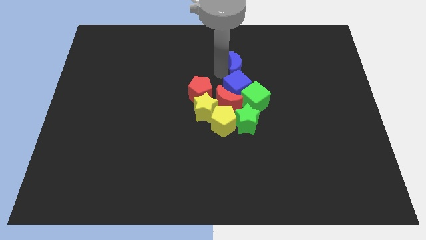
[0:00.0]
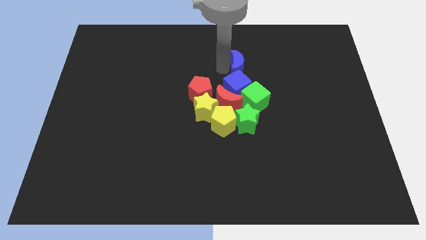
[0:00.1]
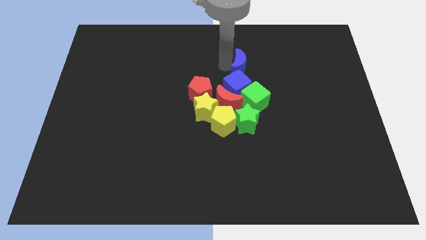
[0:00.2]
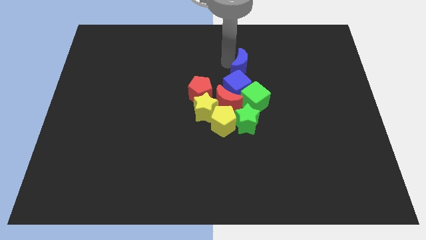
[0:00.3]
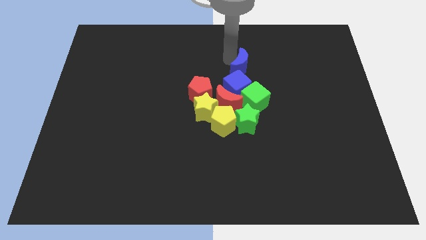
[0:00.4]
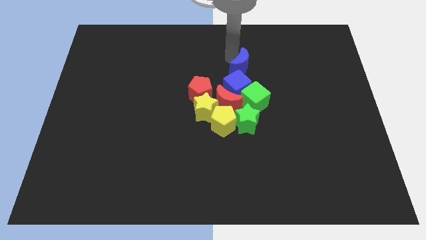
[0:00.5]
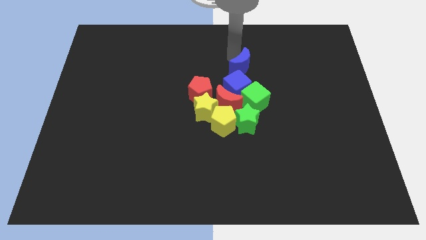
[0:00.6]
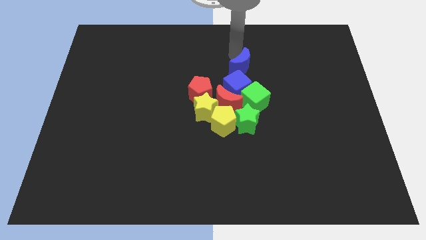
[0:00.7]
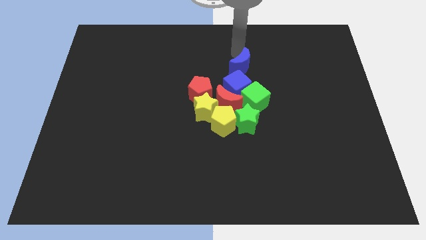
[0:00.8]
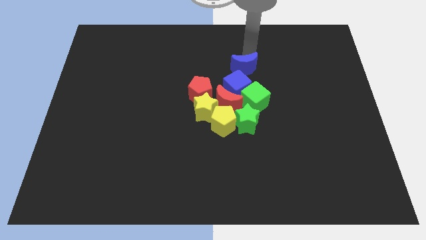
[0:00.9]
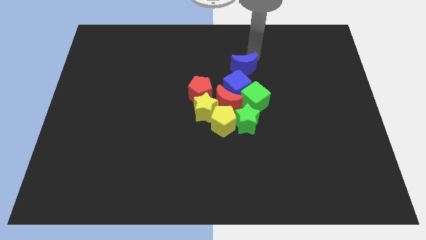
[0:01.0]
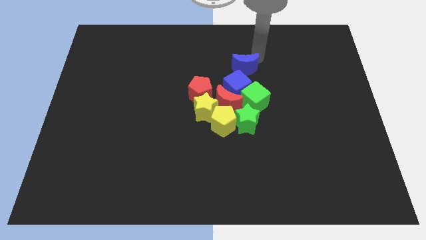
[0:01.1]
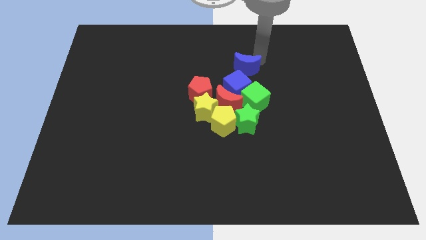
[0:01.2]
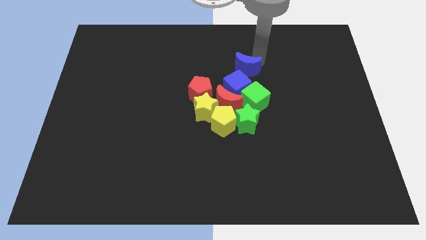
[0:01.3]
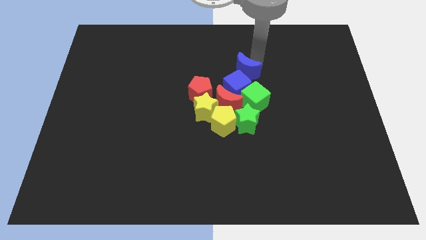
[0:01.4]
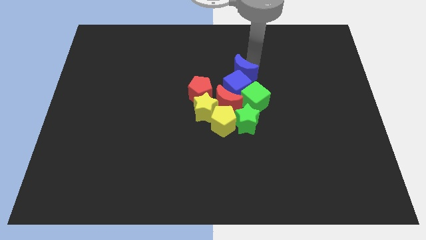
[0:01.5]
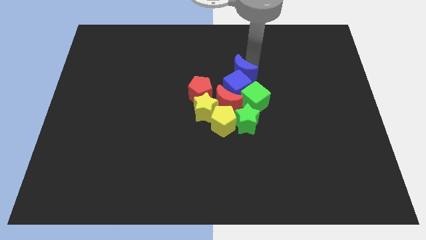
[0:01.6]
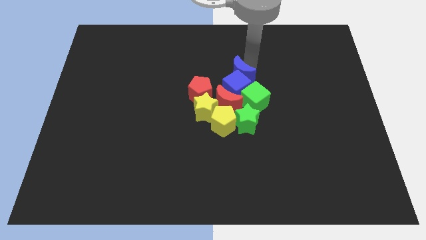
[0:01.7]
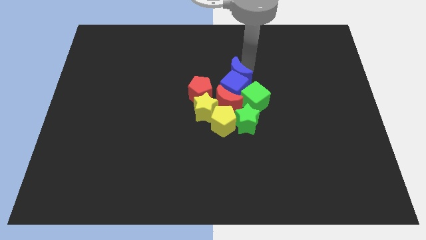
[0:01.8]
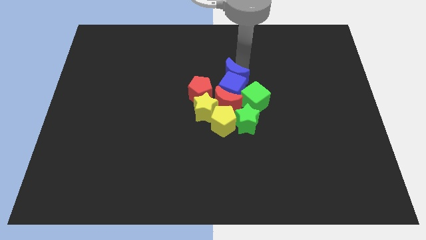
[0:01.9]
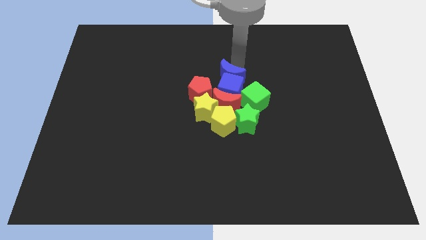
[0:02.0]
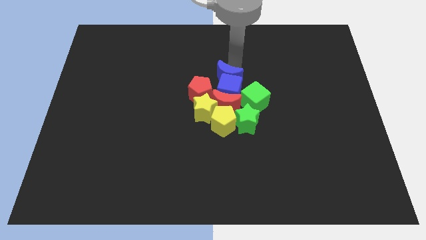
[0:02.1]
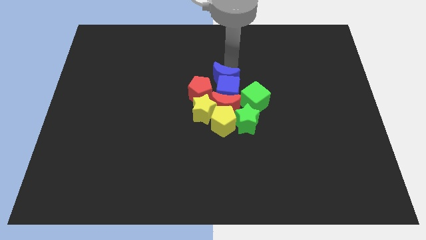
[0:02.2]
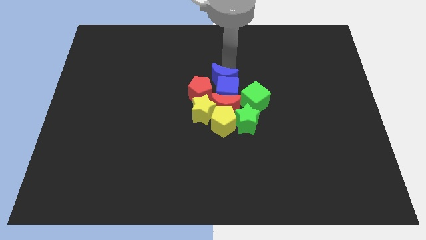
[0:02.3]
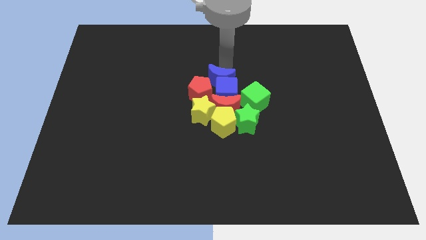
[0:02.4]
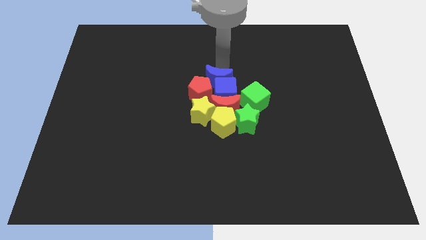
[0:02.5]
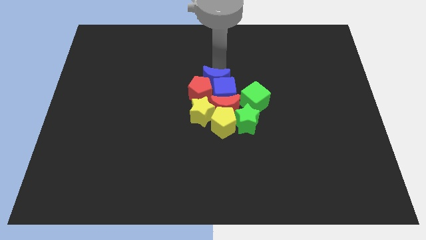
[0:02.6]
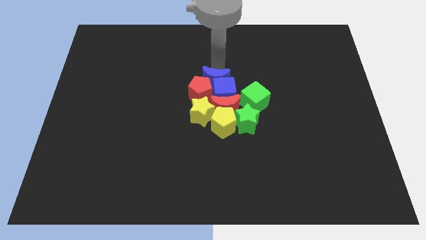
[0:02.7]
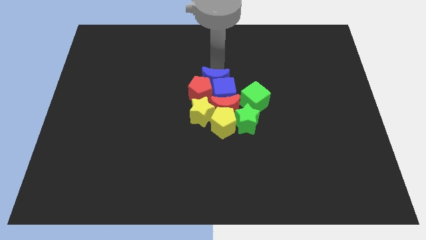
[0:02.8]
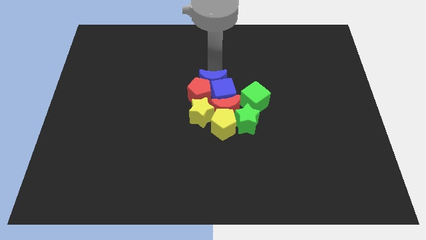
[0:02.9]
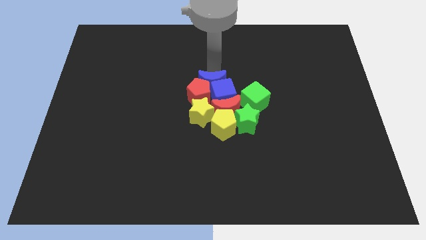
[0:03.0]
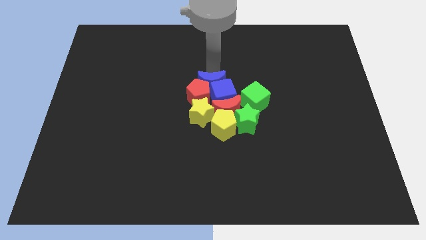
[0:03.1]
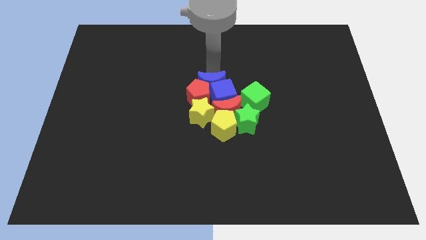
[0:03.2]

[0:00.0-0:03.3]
move the blue crescent into the blue cube

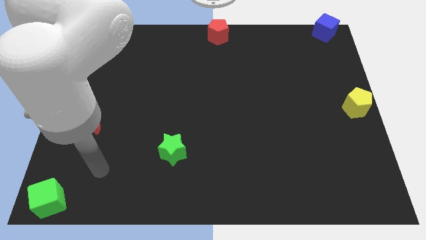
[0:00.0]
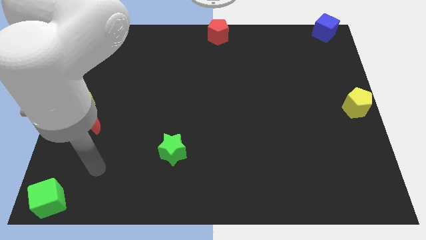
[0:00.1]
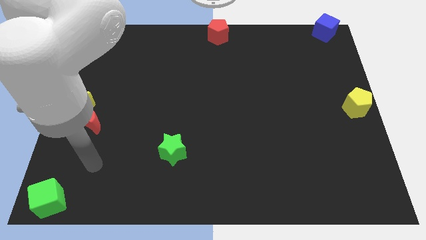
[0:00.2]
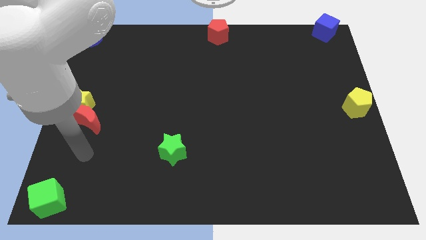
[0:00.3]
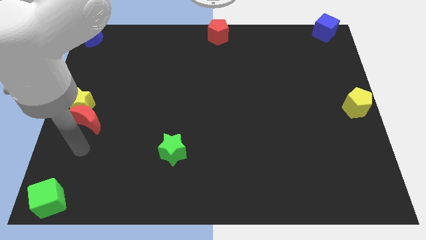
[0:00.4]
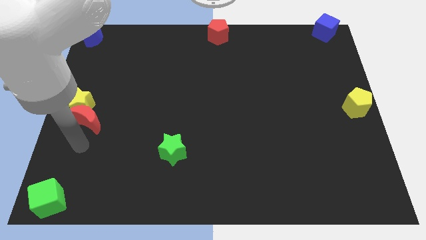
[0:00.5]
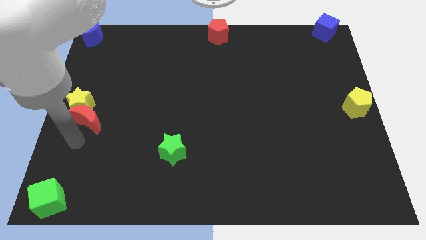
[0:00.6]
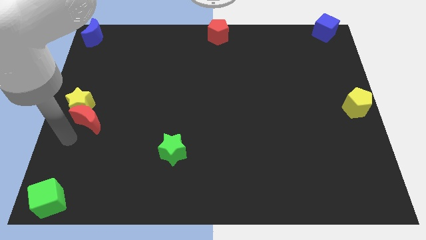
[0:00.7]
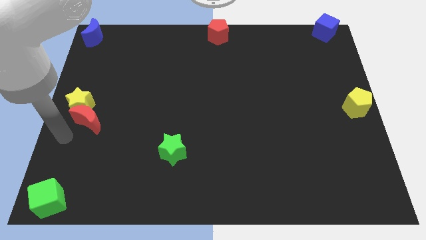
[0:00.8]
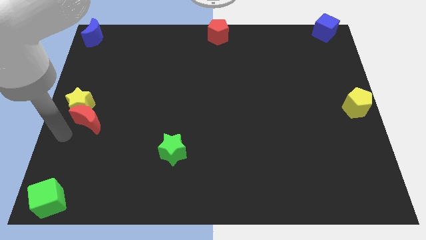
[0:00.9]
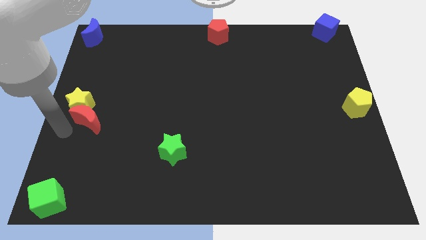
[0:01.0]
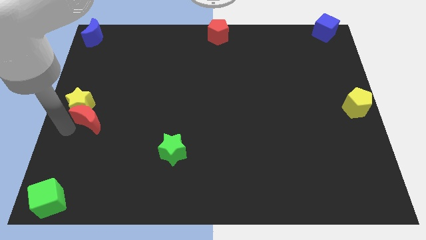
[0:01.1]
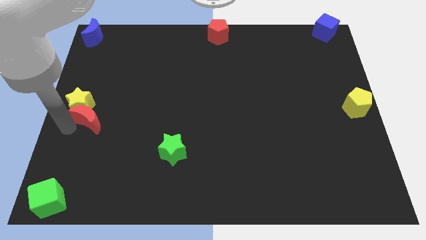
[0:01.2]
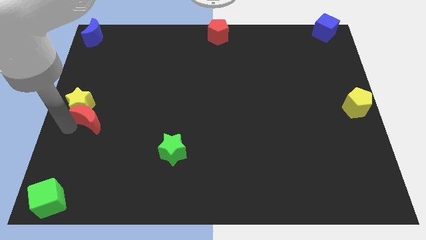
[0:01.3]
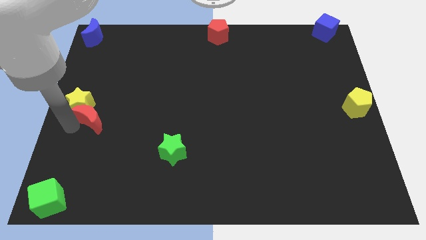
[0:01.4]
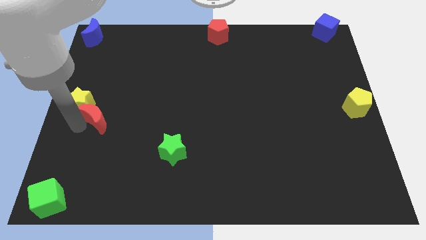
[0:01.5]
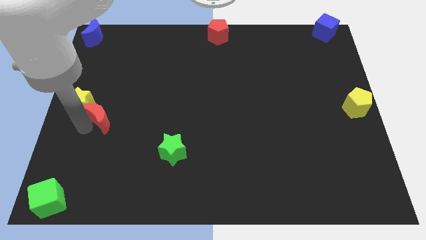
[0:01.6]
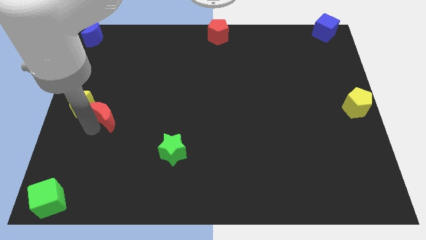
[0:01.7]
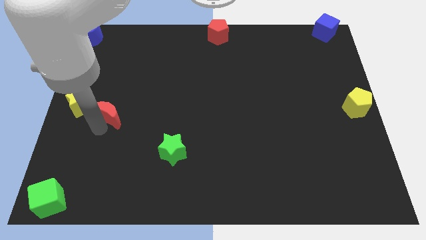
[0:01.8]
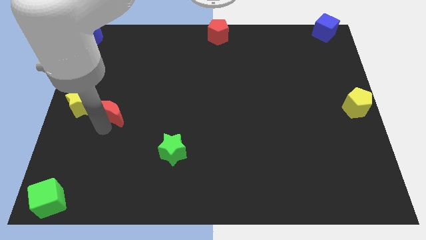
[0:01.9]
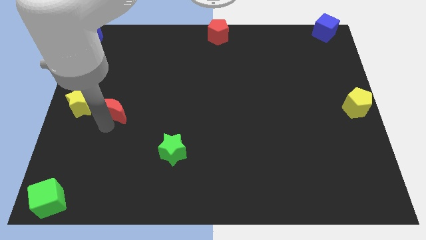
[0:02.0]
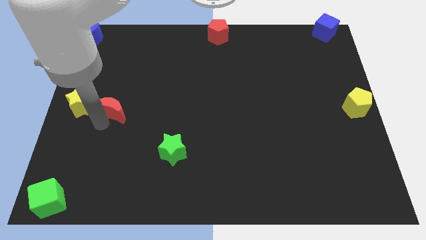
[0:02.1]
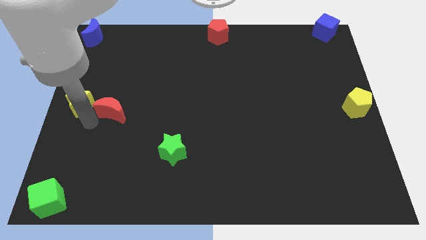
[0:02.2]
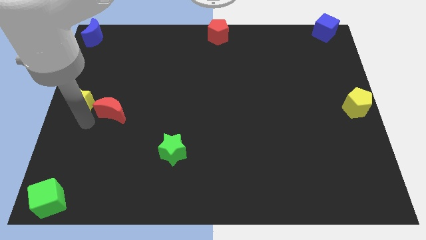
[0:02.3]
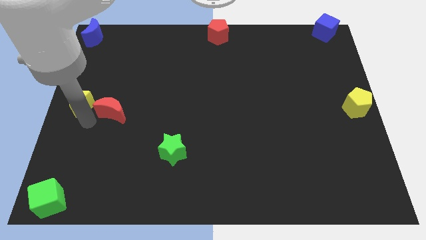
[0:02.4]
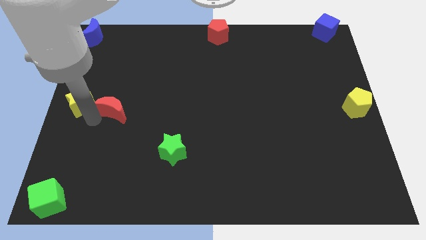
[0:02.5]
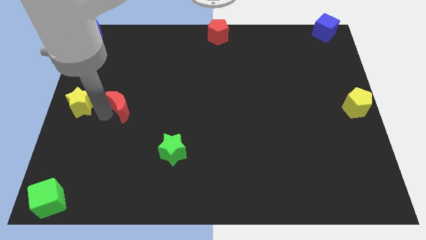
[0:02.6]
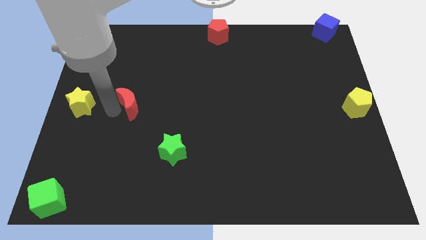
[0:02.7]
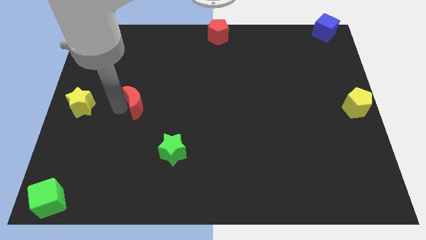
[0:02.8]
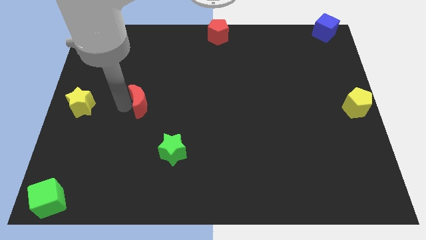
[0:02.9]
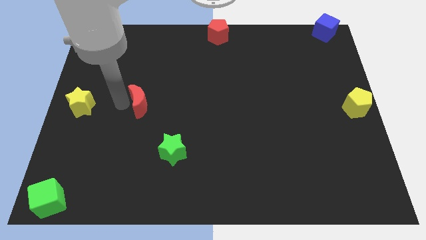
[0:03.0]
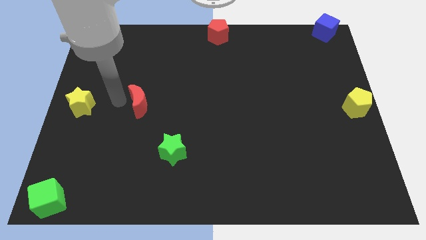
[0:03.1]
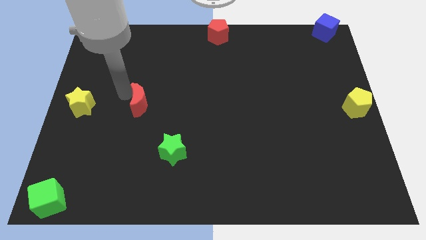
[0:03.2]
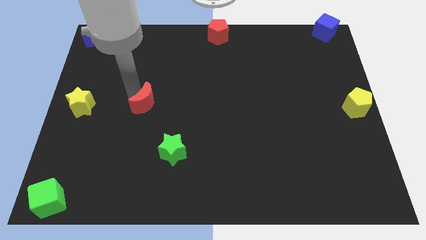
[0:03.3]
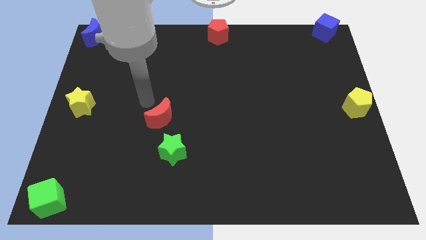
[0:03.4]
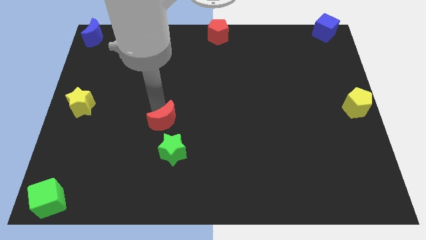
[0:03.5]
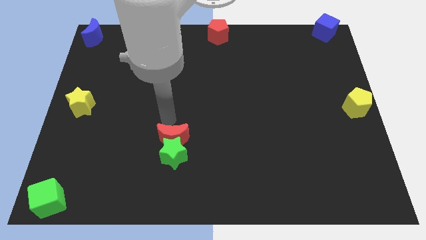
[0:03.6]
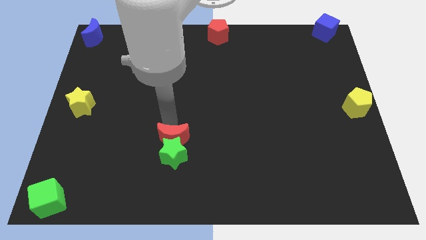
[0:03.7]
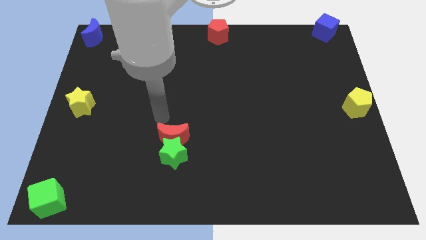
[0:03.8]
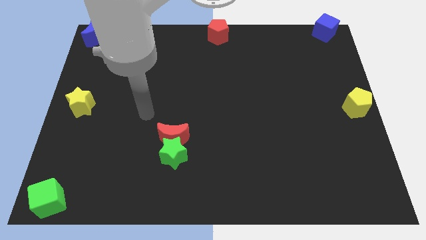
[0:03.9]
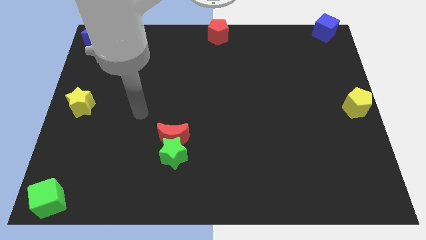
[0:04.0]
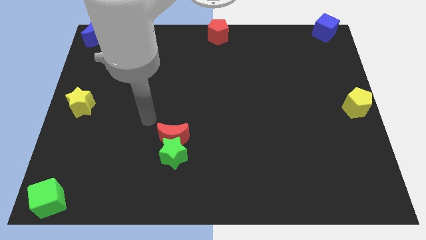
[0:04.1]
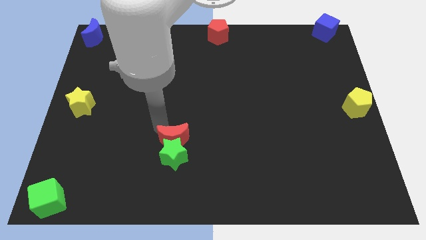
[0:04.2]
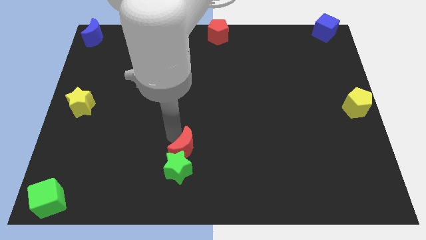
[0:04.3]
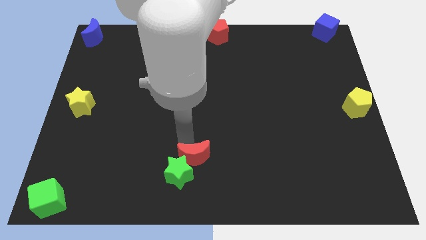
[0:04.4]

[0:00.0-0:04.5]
push the green star towards the bottom side with the red crescent

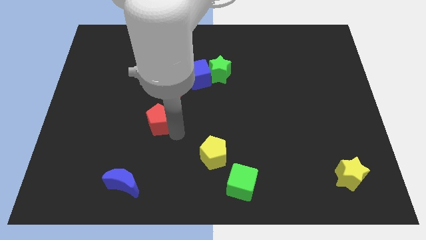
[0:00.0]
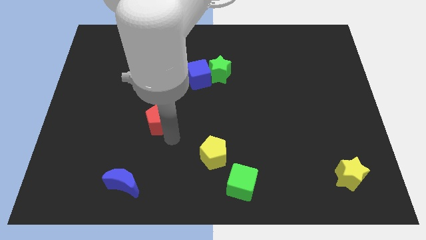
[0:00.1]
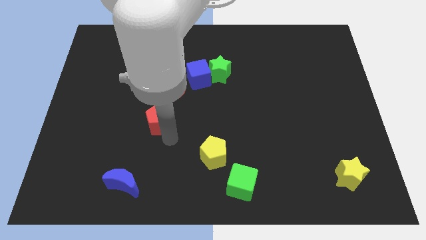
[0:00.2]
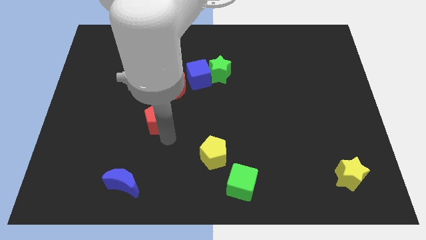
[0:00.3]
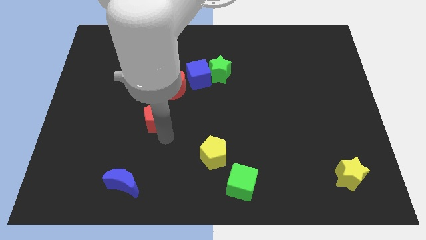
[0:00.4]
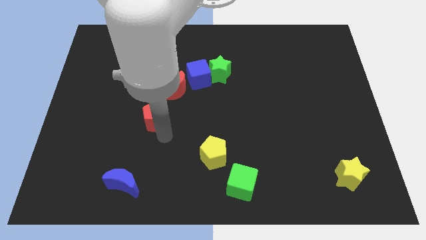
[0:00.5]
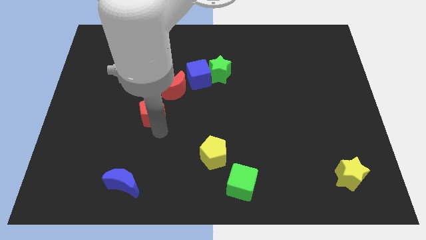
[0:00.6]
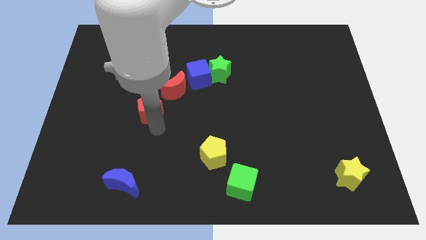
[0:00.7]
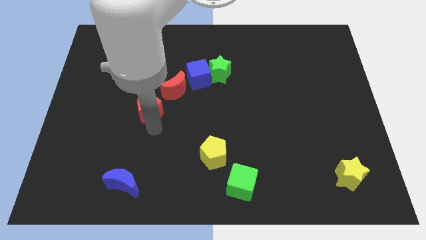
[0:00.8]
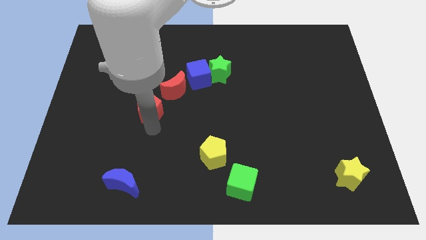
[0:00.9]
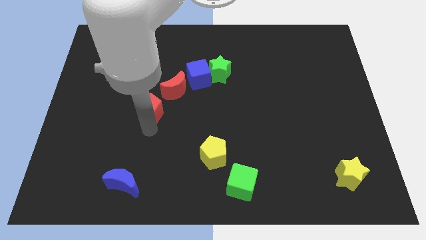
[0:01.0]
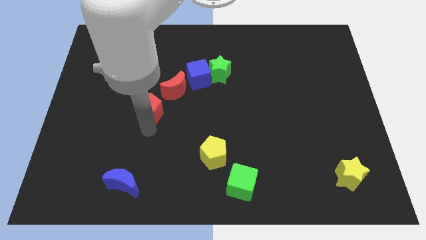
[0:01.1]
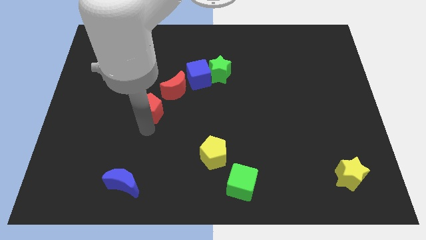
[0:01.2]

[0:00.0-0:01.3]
move the red pentagon slightly towards the bottom left side of the red moon
